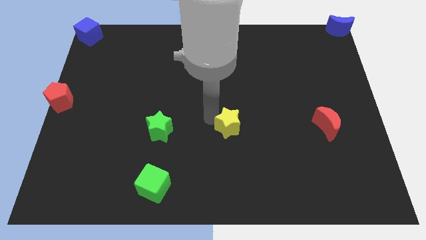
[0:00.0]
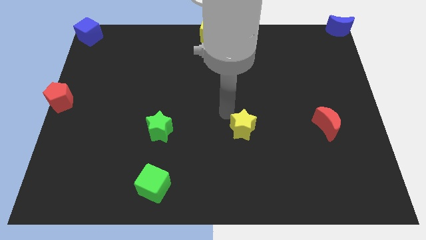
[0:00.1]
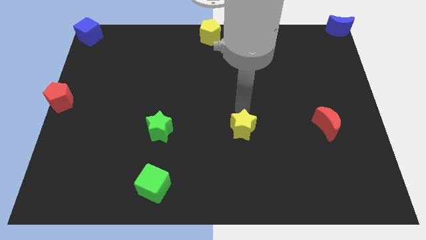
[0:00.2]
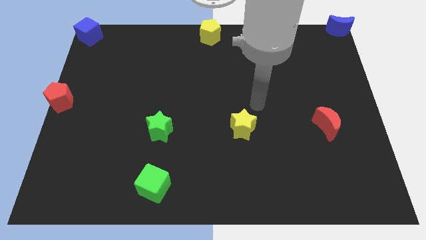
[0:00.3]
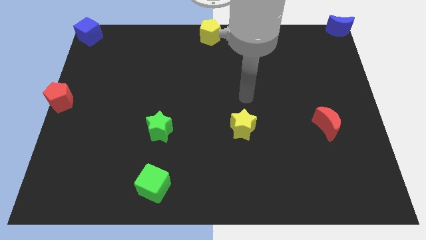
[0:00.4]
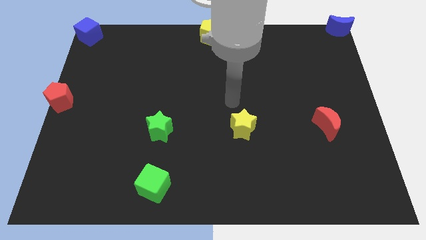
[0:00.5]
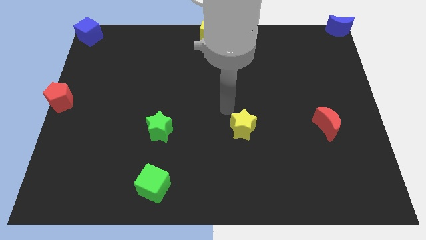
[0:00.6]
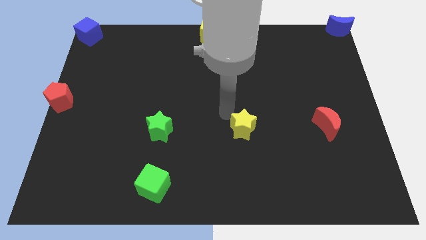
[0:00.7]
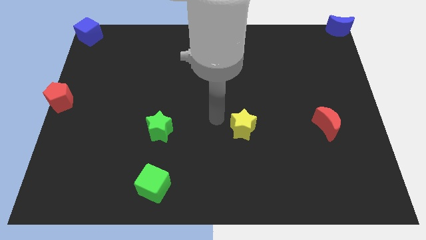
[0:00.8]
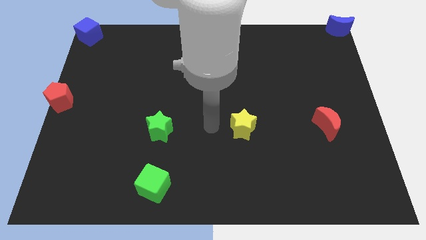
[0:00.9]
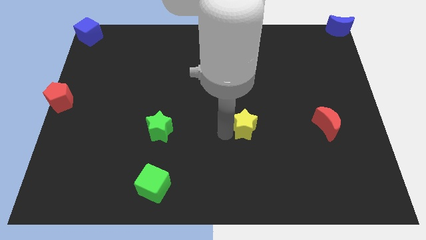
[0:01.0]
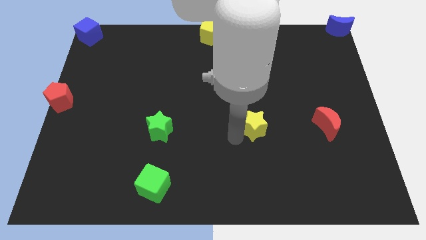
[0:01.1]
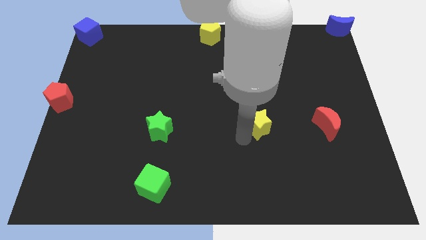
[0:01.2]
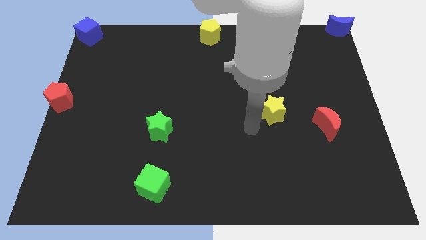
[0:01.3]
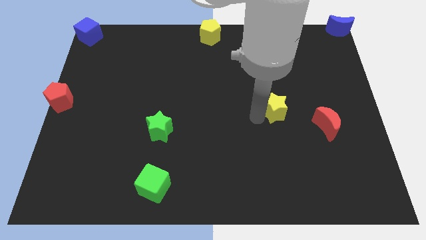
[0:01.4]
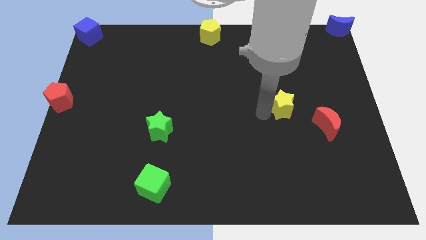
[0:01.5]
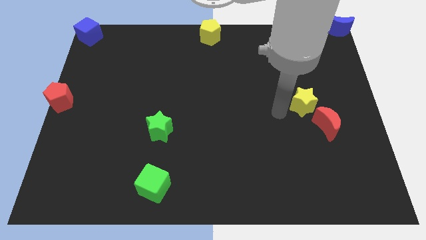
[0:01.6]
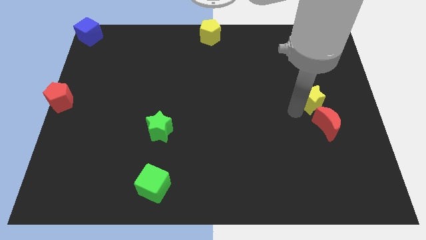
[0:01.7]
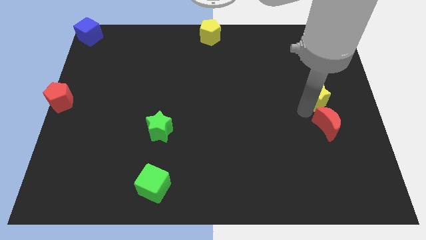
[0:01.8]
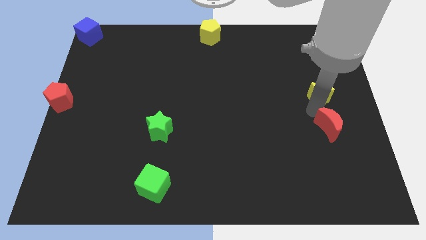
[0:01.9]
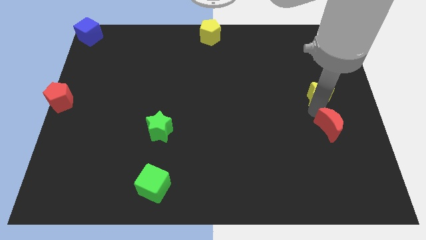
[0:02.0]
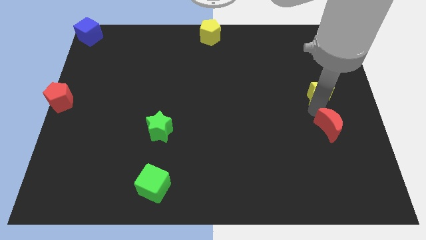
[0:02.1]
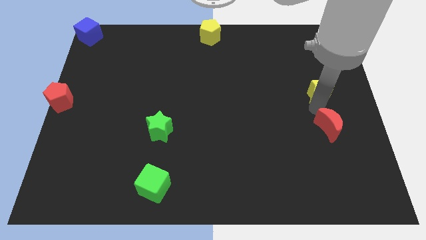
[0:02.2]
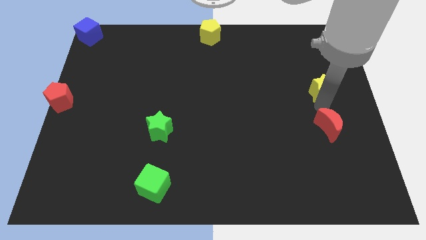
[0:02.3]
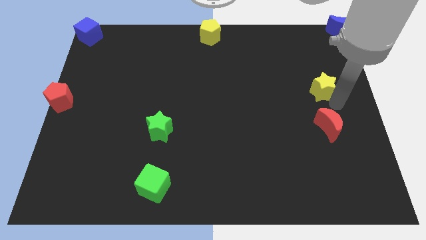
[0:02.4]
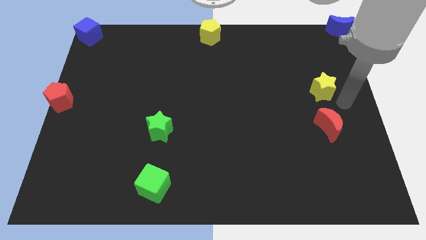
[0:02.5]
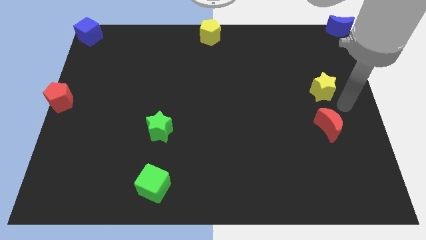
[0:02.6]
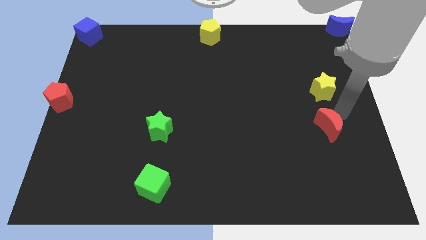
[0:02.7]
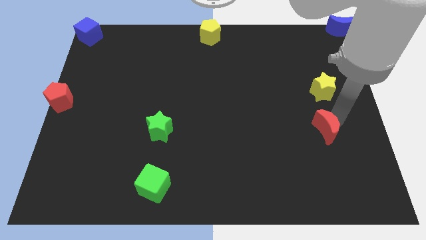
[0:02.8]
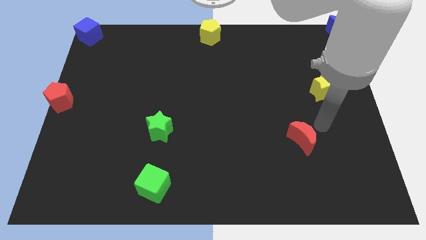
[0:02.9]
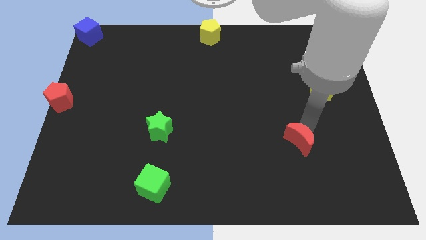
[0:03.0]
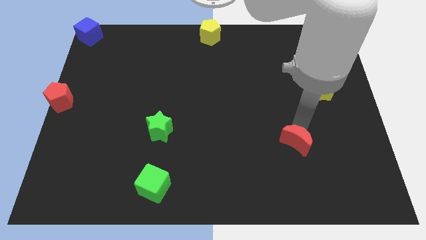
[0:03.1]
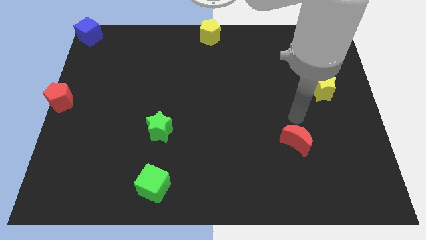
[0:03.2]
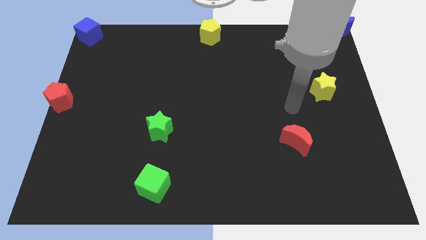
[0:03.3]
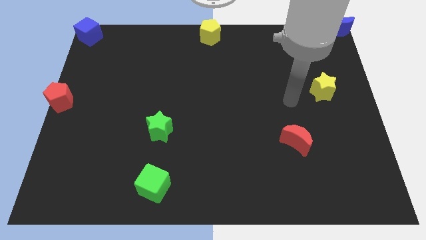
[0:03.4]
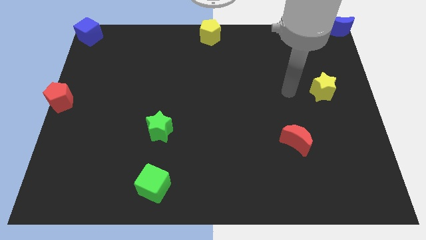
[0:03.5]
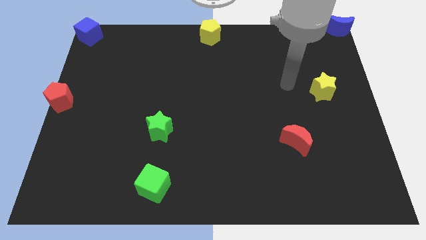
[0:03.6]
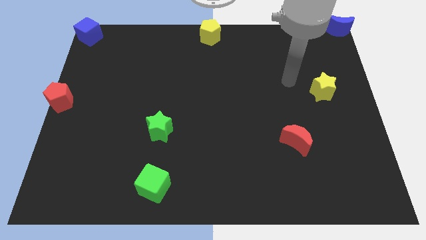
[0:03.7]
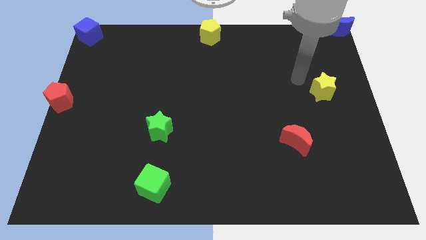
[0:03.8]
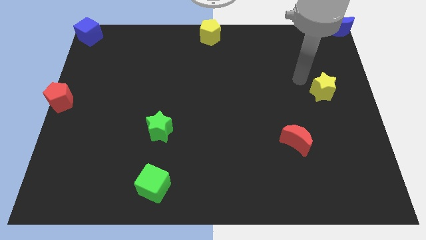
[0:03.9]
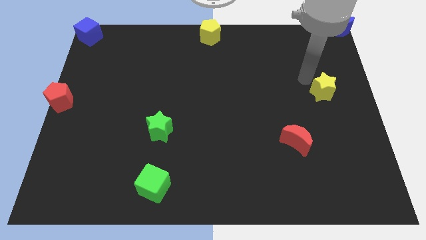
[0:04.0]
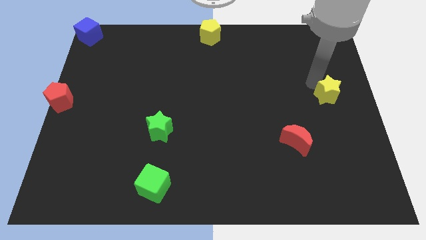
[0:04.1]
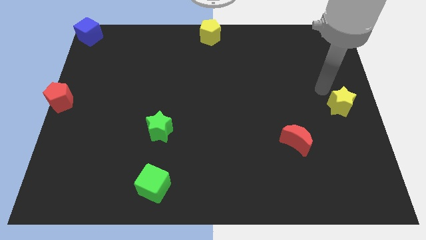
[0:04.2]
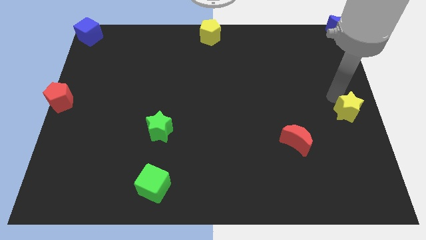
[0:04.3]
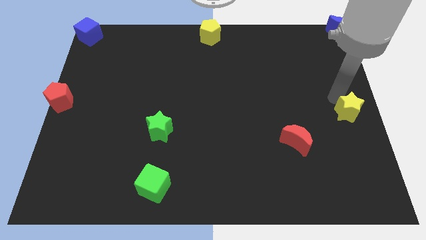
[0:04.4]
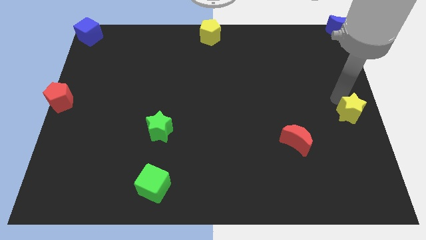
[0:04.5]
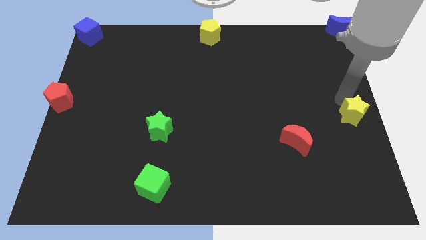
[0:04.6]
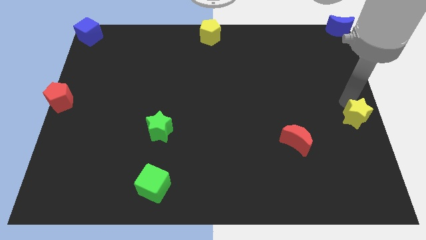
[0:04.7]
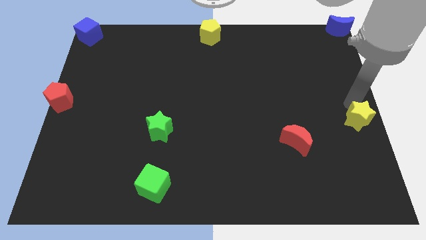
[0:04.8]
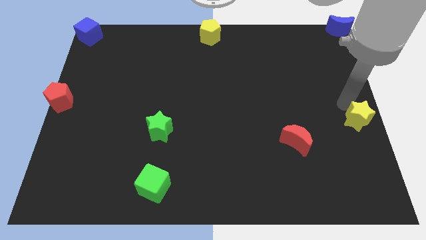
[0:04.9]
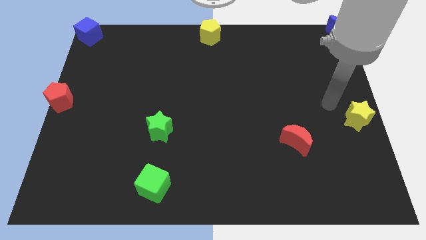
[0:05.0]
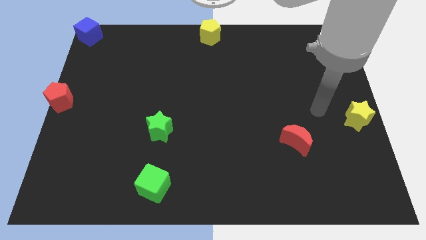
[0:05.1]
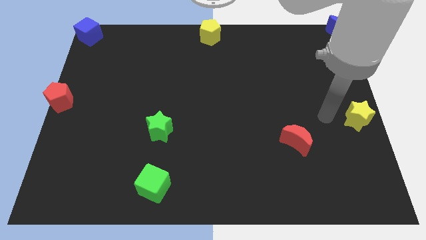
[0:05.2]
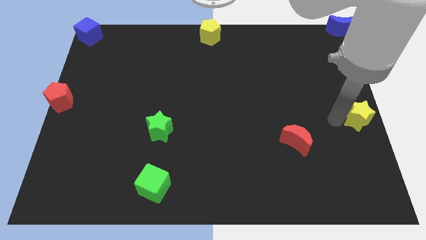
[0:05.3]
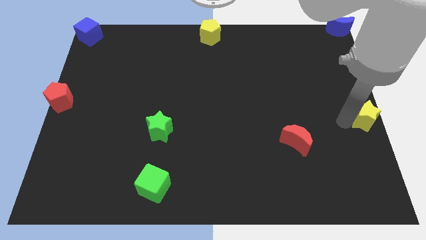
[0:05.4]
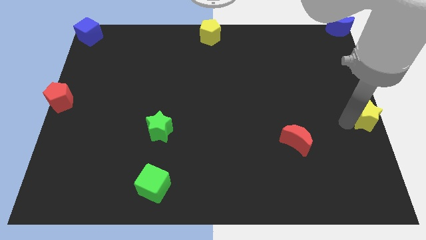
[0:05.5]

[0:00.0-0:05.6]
move the yellow star towards the right center of the board

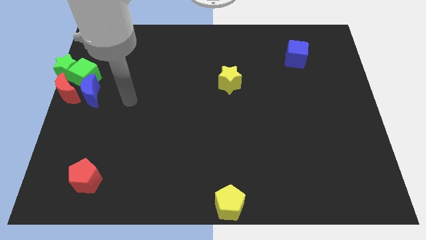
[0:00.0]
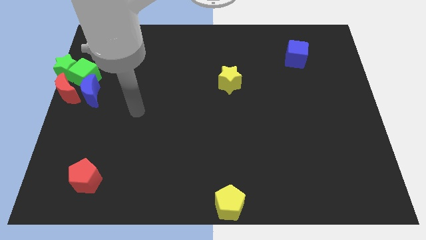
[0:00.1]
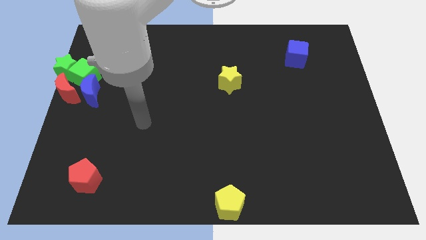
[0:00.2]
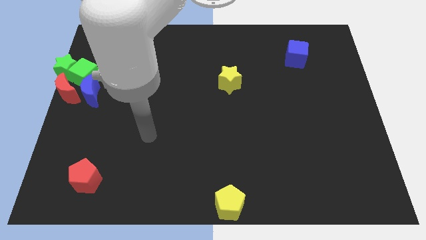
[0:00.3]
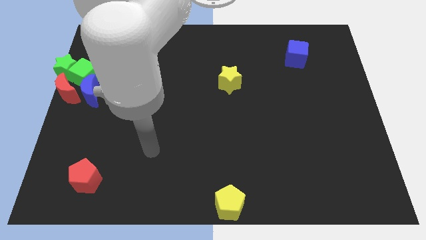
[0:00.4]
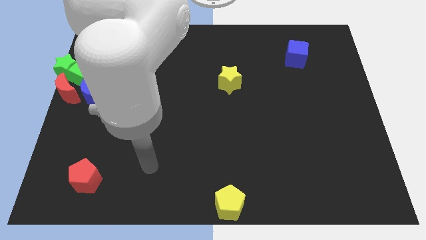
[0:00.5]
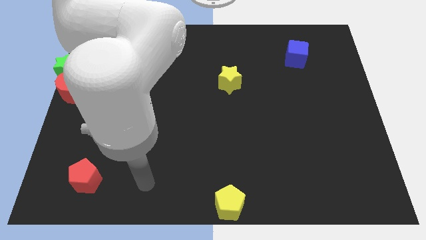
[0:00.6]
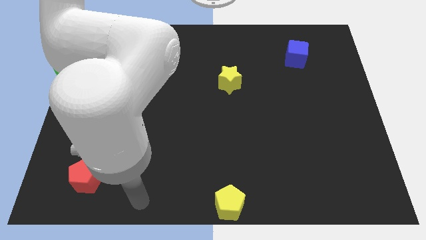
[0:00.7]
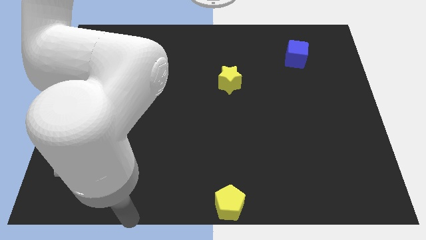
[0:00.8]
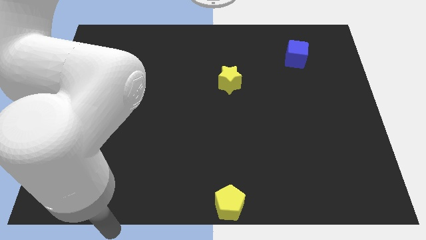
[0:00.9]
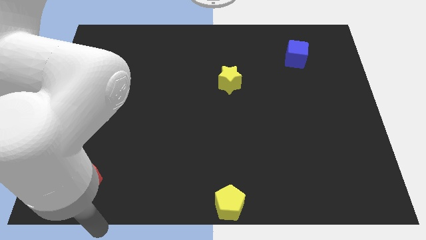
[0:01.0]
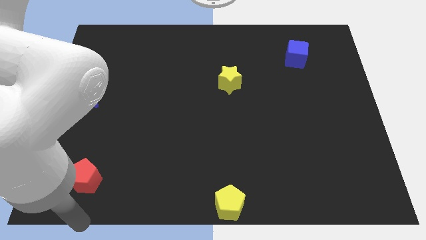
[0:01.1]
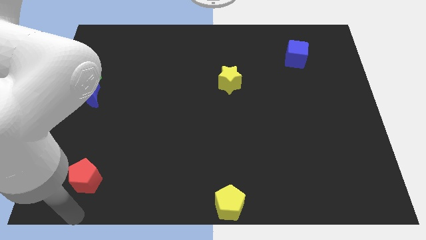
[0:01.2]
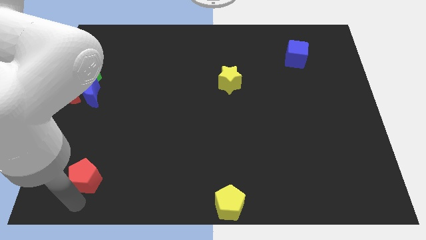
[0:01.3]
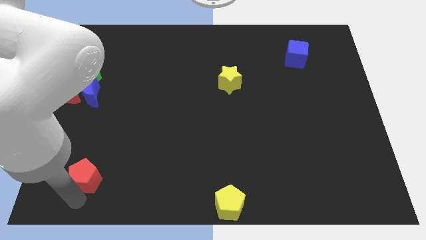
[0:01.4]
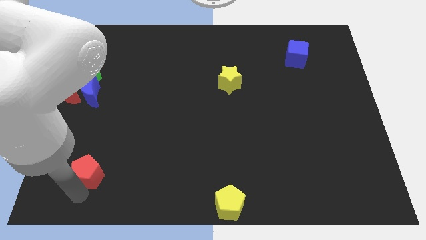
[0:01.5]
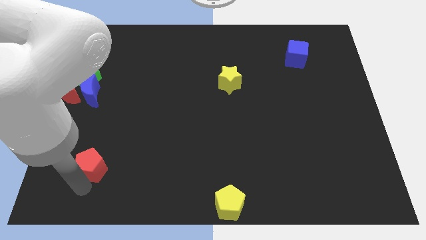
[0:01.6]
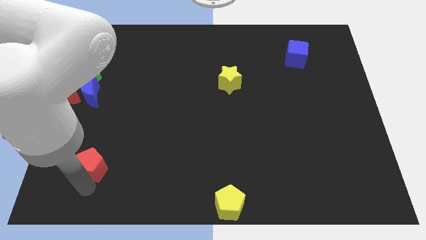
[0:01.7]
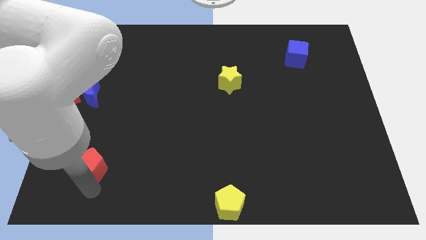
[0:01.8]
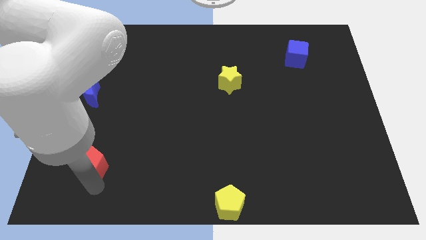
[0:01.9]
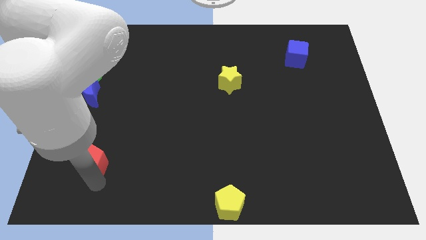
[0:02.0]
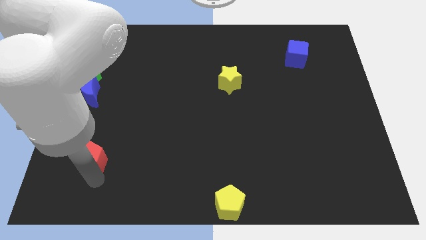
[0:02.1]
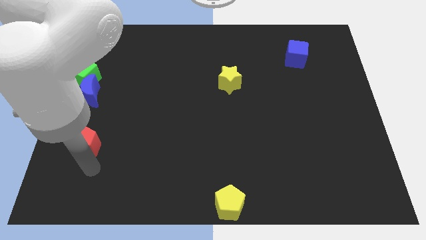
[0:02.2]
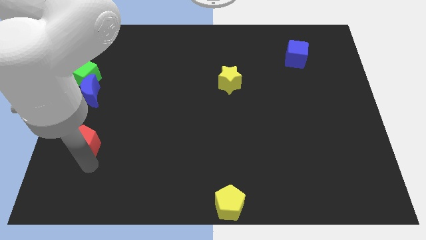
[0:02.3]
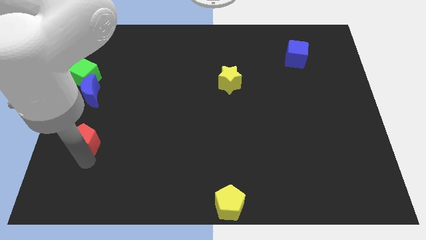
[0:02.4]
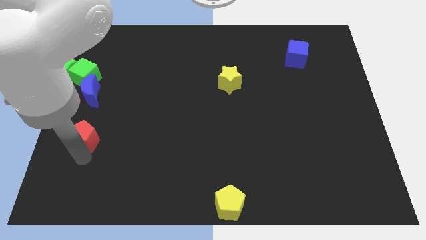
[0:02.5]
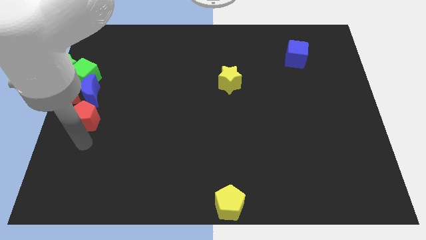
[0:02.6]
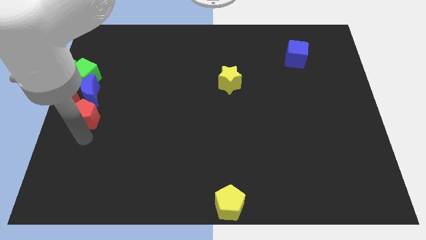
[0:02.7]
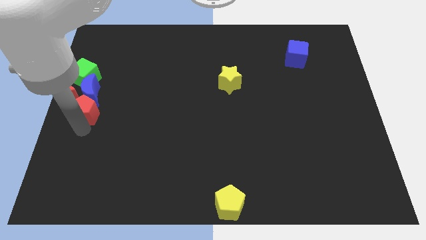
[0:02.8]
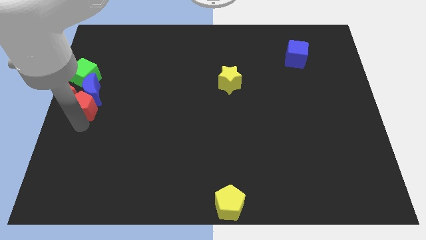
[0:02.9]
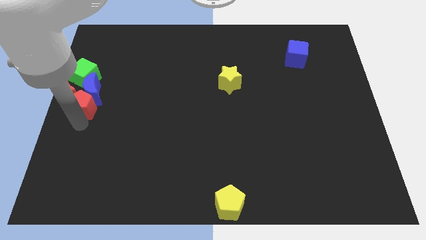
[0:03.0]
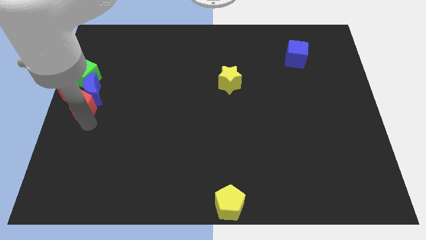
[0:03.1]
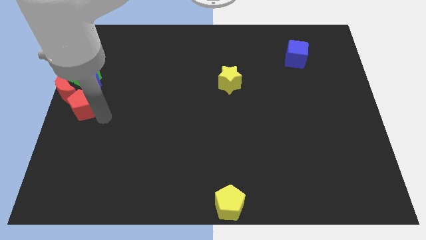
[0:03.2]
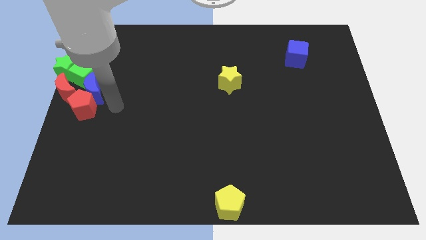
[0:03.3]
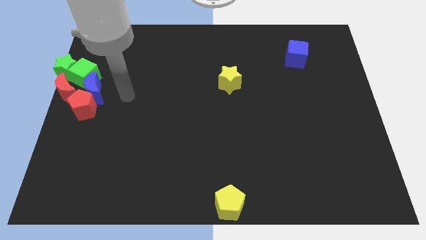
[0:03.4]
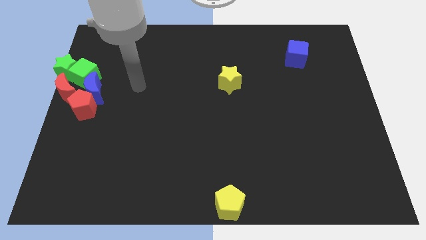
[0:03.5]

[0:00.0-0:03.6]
place the red pentagon below the blue crescent
